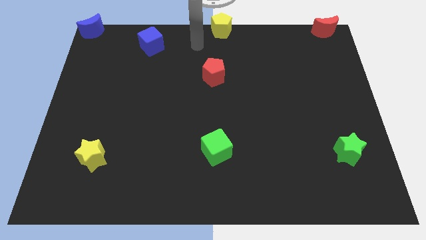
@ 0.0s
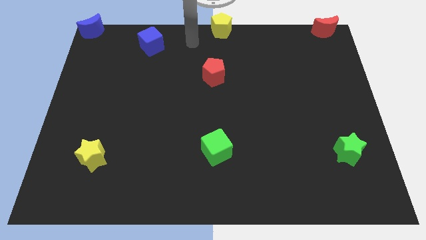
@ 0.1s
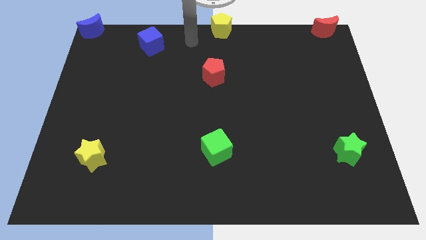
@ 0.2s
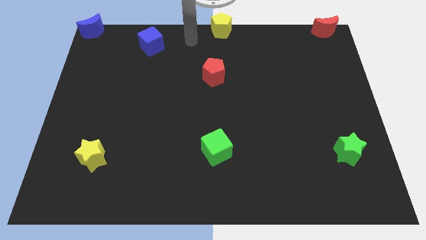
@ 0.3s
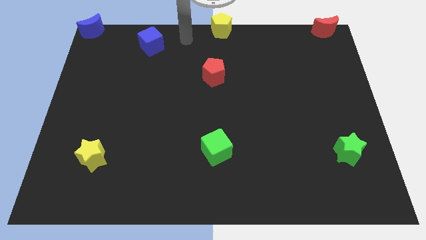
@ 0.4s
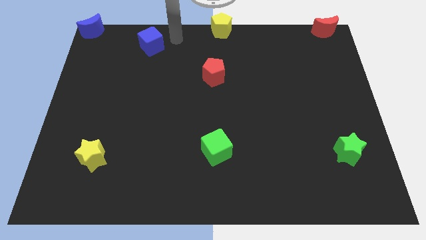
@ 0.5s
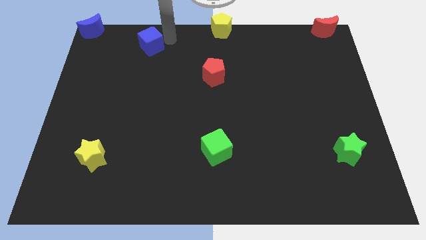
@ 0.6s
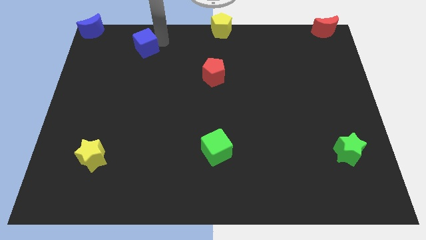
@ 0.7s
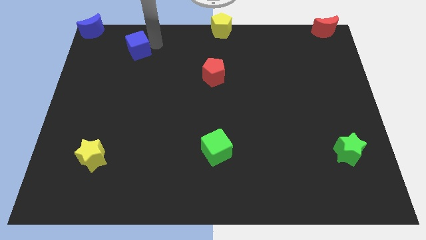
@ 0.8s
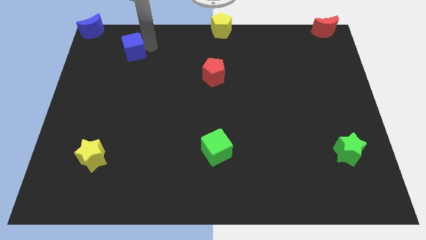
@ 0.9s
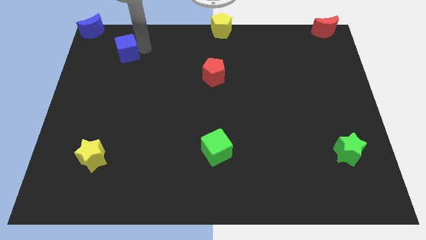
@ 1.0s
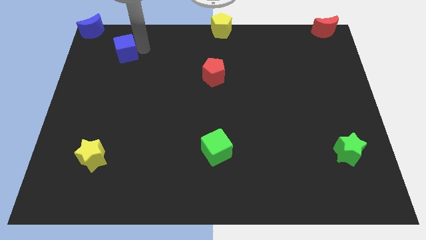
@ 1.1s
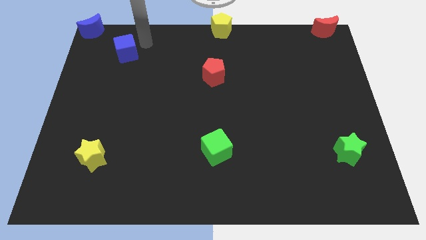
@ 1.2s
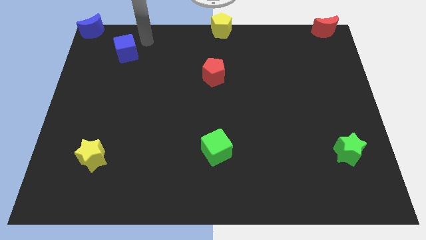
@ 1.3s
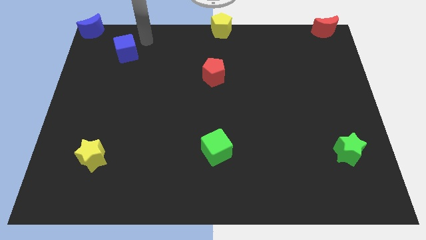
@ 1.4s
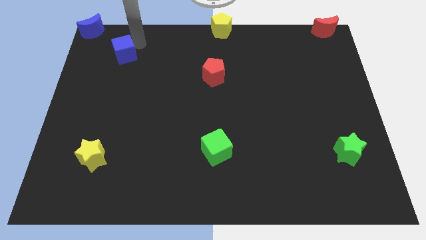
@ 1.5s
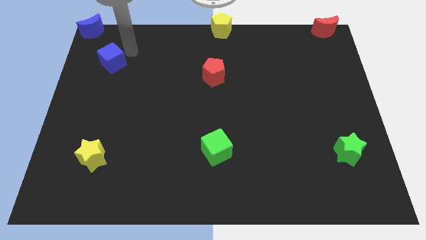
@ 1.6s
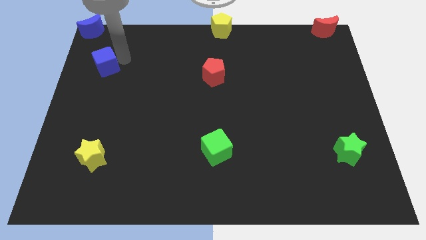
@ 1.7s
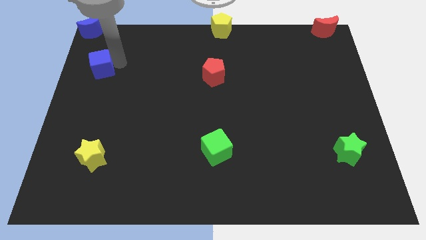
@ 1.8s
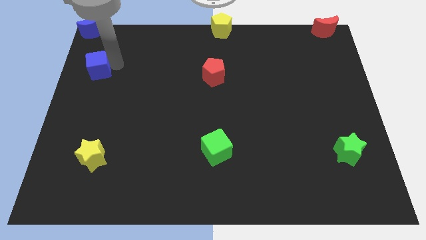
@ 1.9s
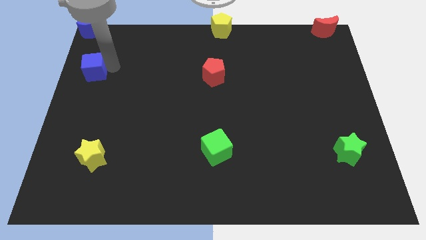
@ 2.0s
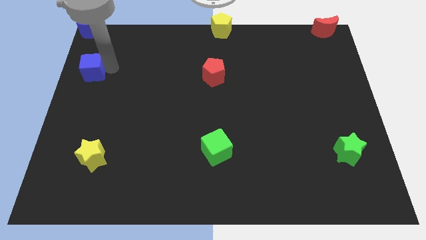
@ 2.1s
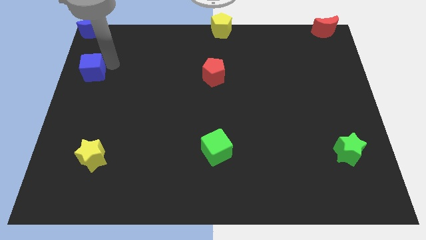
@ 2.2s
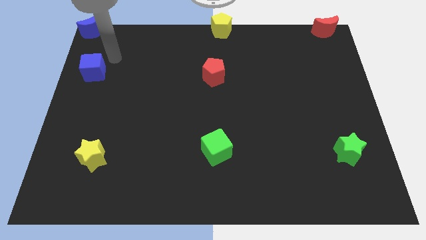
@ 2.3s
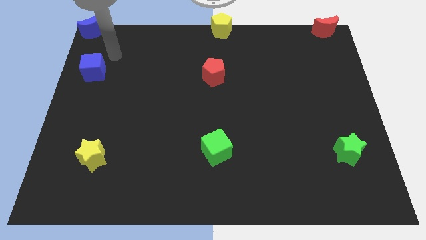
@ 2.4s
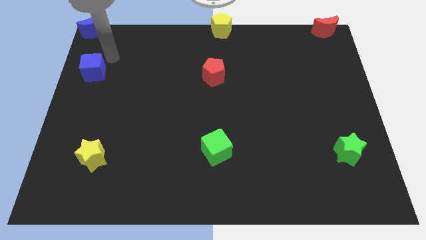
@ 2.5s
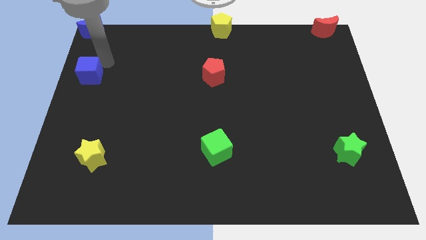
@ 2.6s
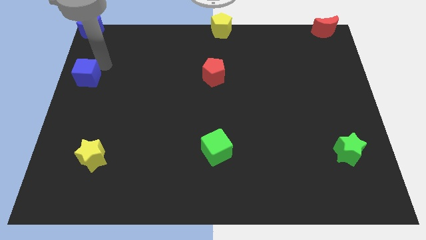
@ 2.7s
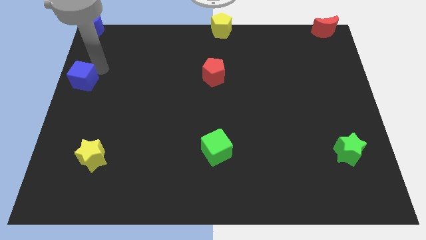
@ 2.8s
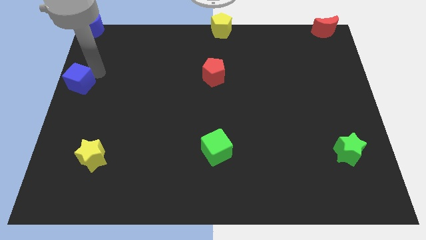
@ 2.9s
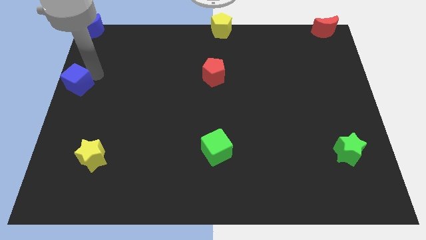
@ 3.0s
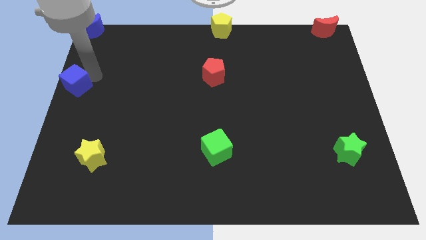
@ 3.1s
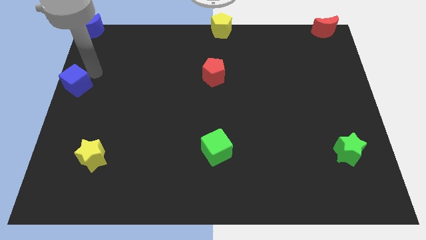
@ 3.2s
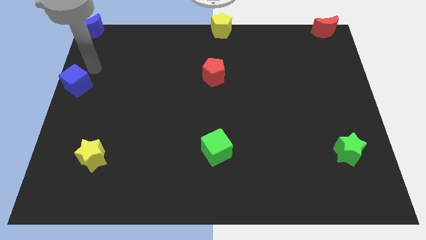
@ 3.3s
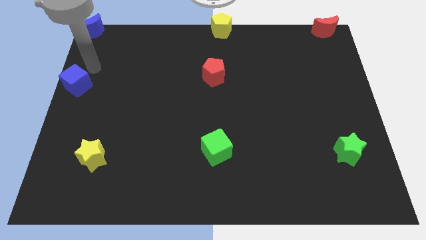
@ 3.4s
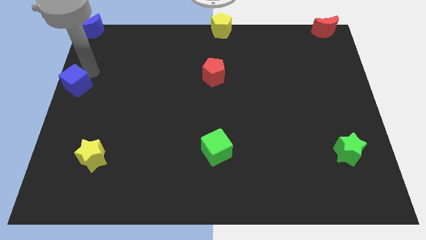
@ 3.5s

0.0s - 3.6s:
place blue cube below blue crescent

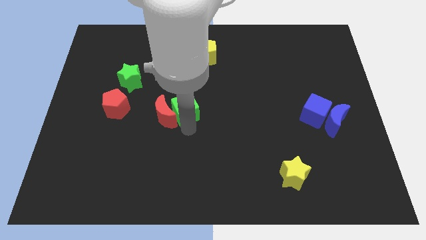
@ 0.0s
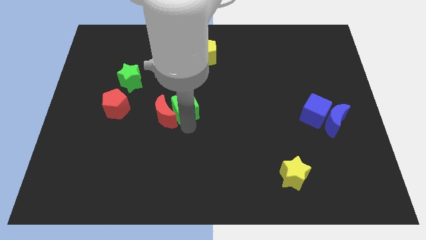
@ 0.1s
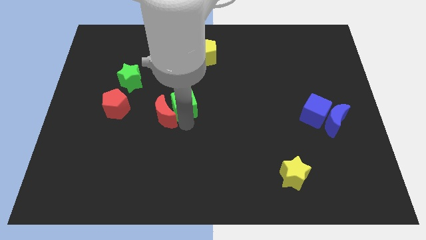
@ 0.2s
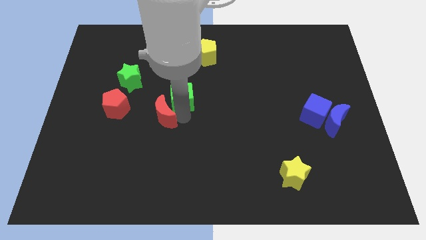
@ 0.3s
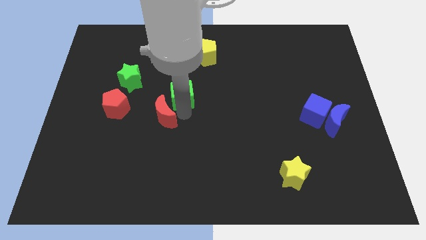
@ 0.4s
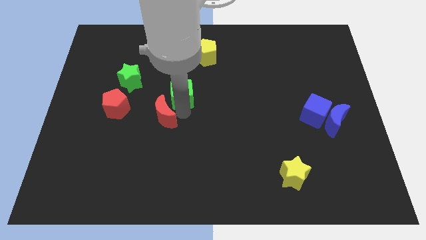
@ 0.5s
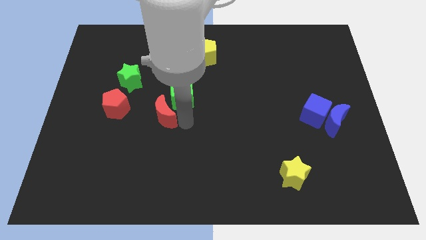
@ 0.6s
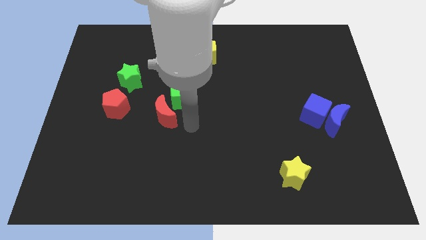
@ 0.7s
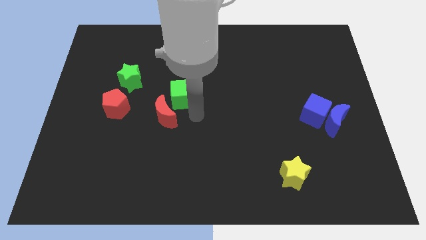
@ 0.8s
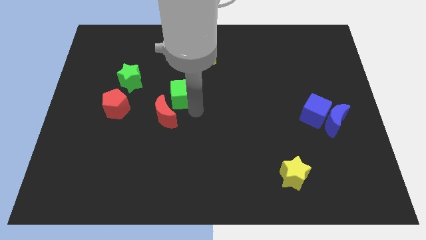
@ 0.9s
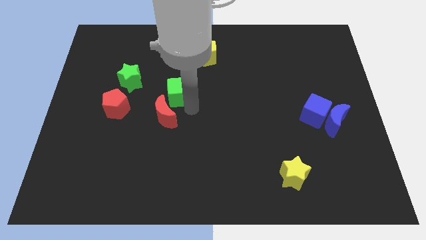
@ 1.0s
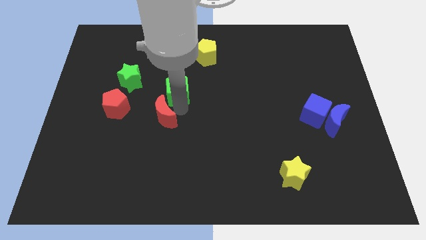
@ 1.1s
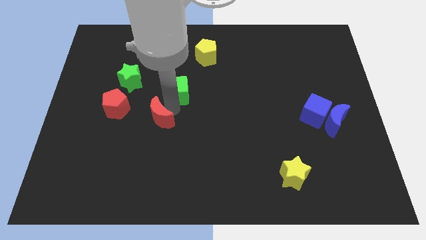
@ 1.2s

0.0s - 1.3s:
push the green cube slightly towards the top

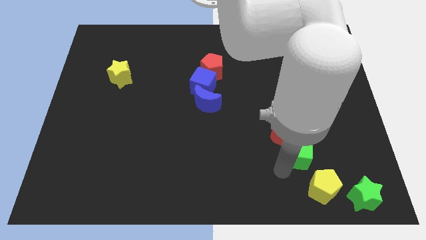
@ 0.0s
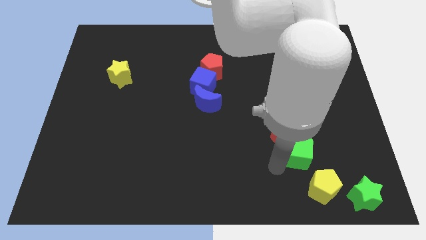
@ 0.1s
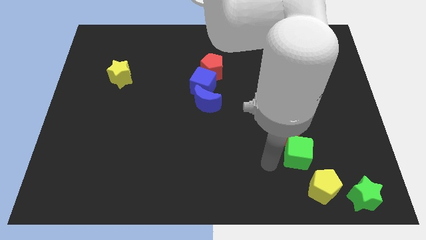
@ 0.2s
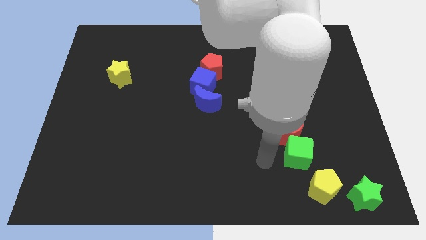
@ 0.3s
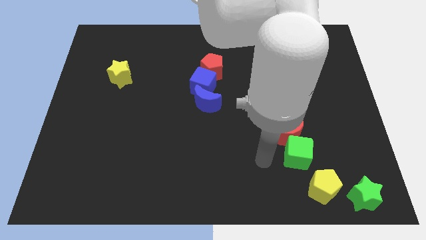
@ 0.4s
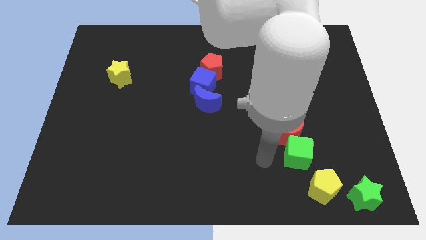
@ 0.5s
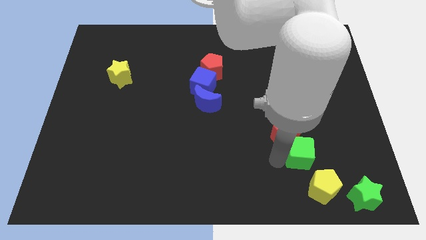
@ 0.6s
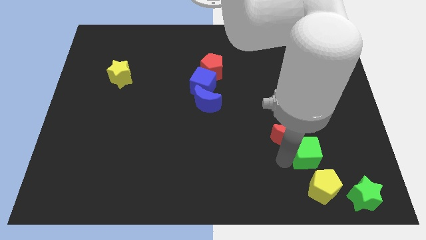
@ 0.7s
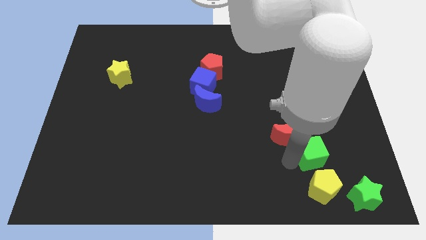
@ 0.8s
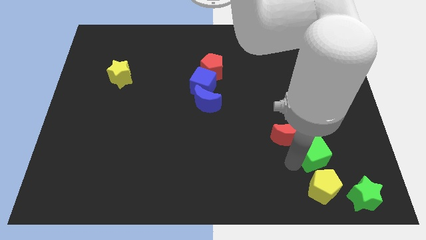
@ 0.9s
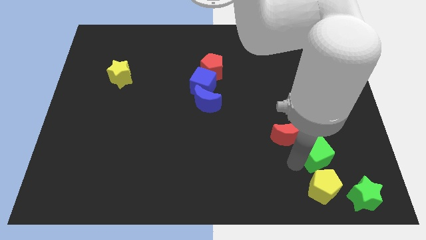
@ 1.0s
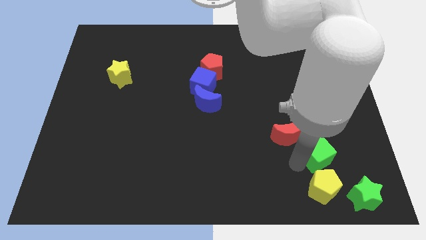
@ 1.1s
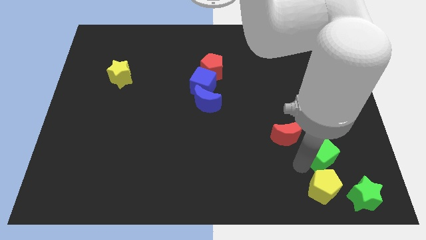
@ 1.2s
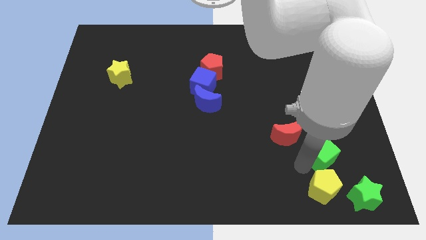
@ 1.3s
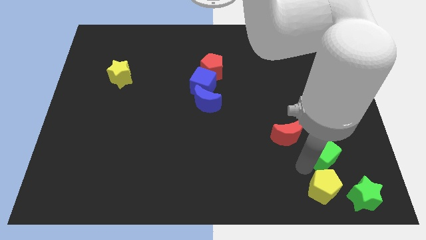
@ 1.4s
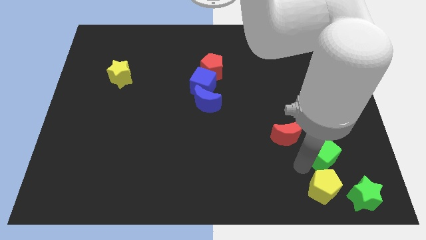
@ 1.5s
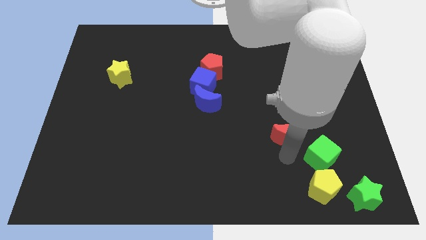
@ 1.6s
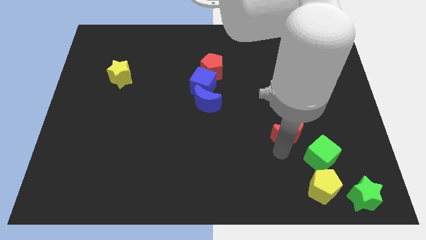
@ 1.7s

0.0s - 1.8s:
move green cube apart from the red moon

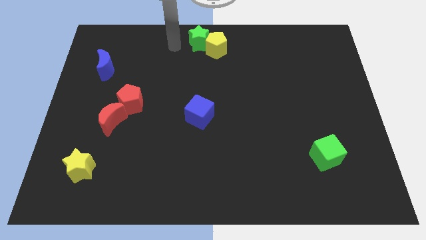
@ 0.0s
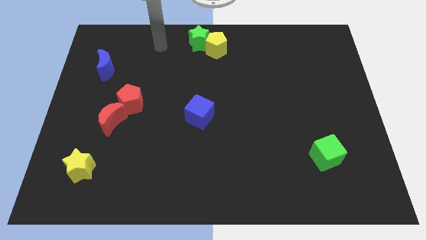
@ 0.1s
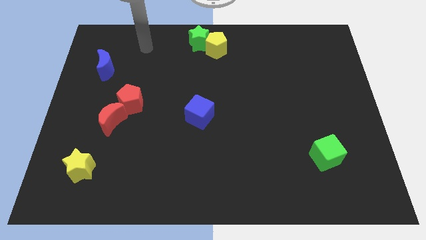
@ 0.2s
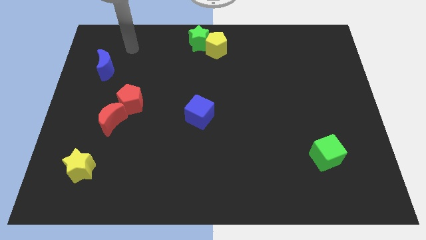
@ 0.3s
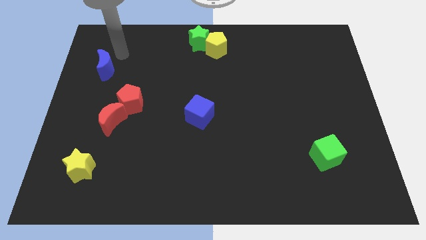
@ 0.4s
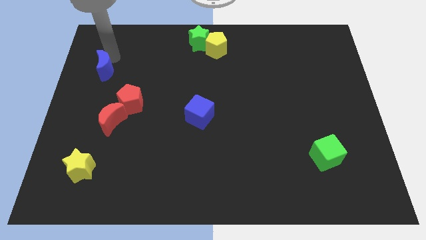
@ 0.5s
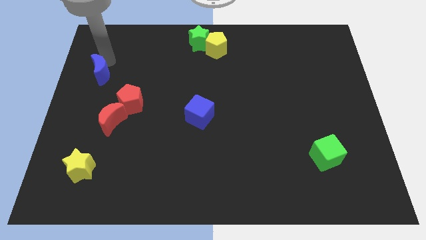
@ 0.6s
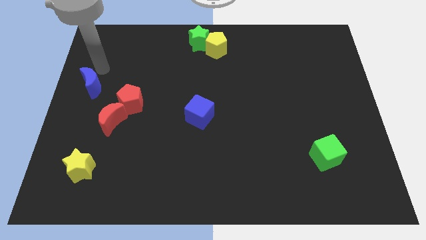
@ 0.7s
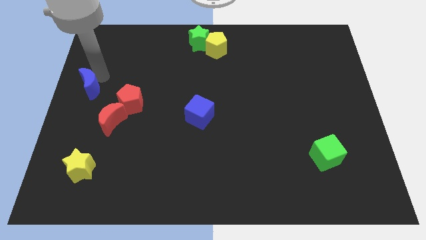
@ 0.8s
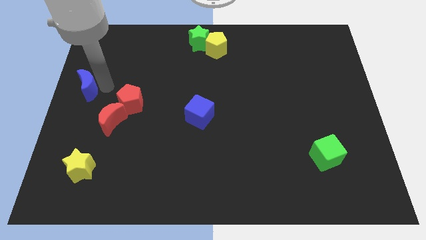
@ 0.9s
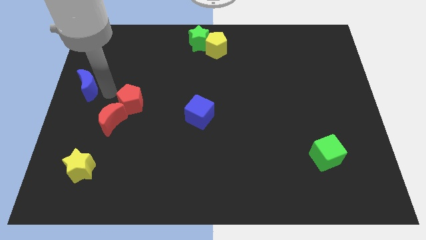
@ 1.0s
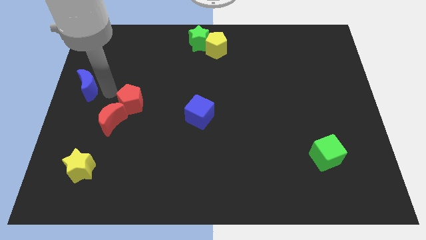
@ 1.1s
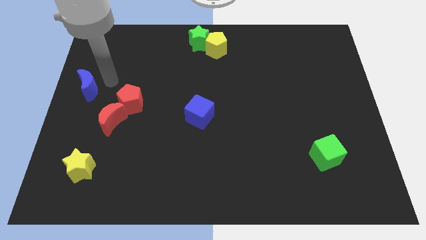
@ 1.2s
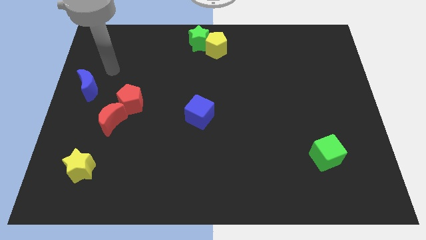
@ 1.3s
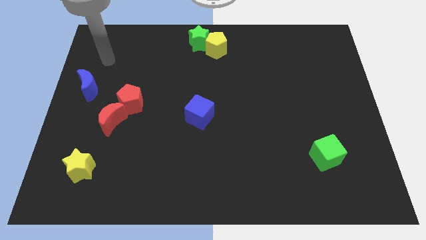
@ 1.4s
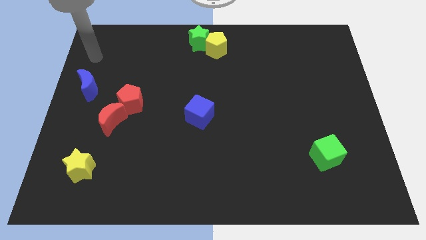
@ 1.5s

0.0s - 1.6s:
move the blue moon towards the bottom

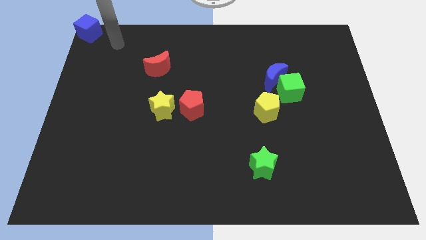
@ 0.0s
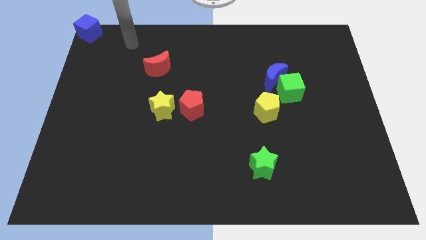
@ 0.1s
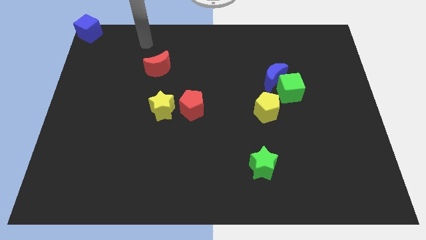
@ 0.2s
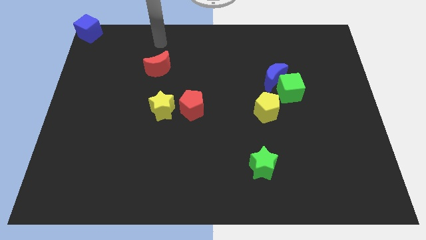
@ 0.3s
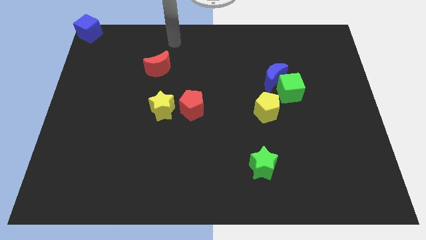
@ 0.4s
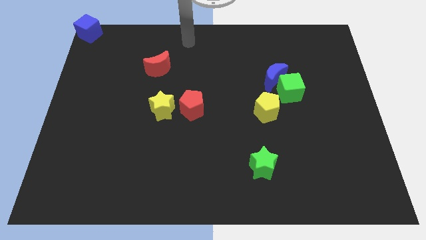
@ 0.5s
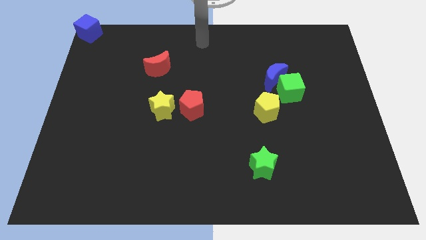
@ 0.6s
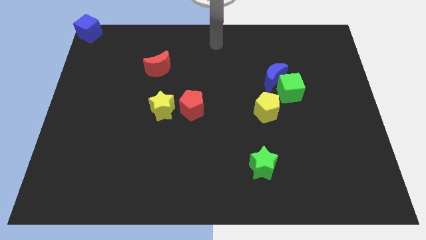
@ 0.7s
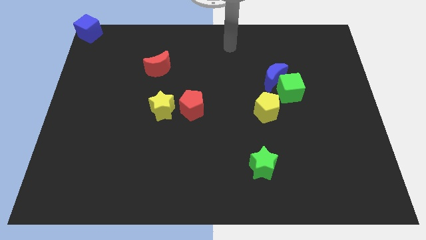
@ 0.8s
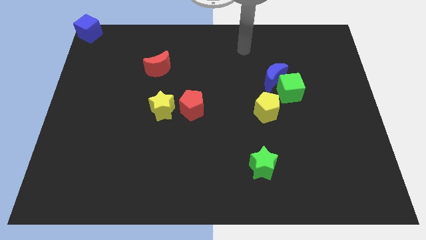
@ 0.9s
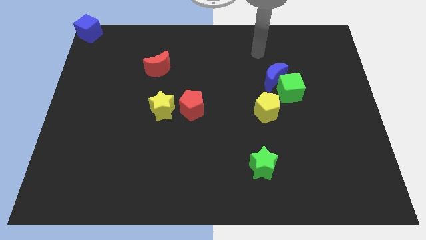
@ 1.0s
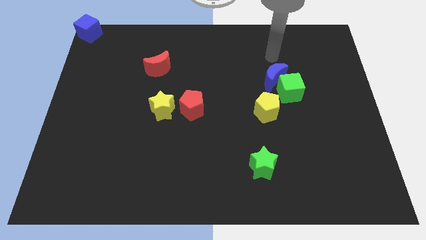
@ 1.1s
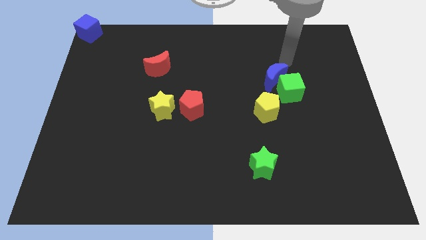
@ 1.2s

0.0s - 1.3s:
move your arm to the top side of the green cube vertically
